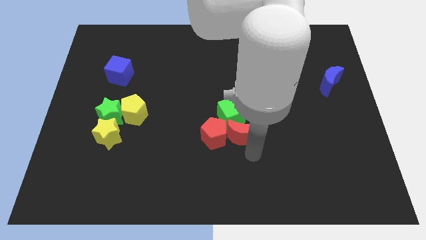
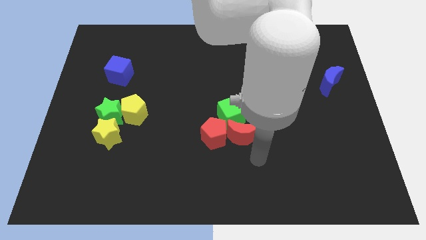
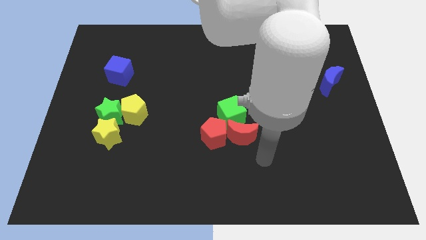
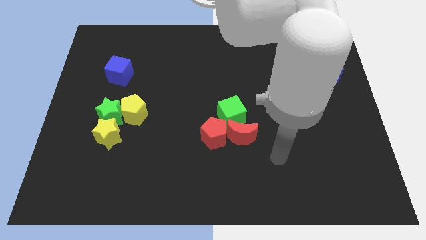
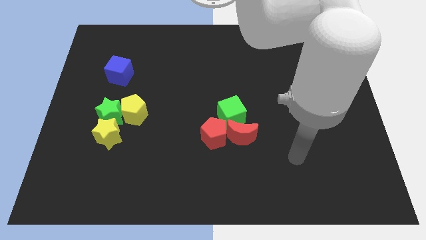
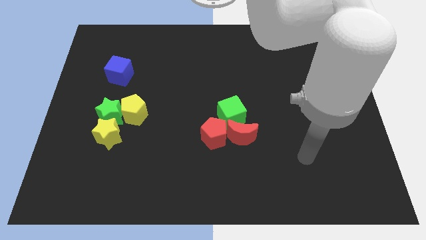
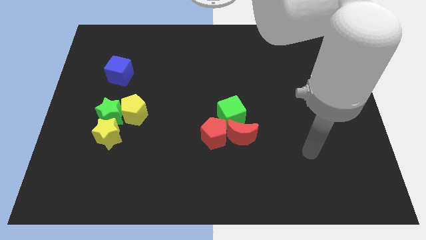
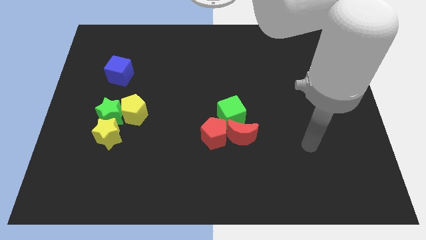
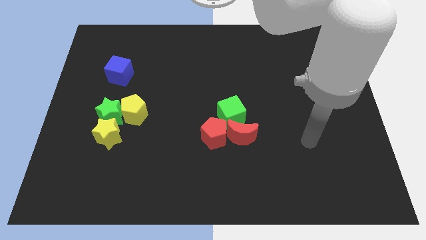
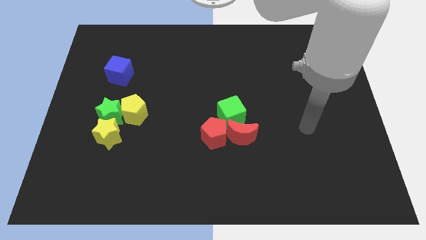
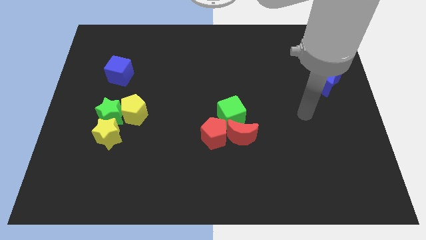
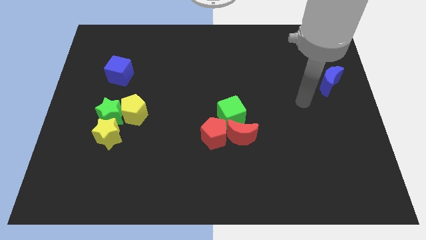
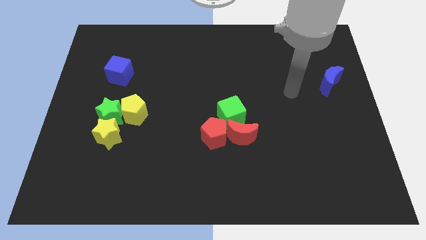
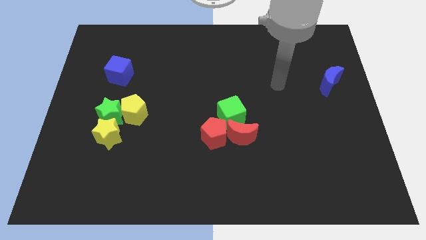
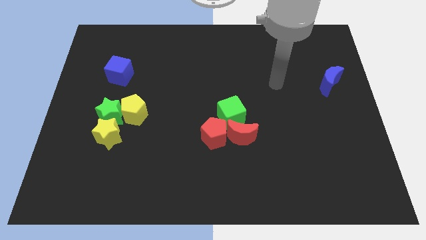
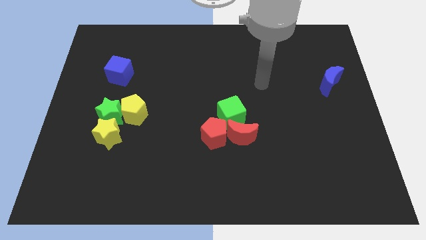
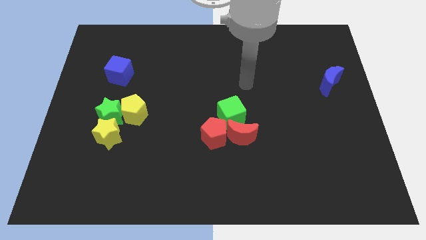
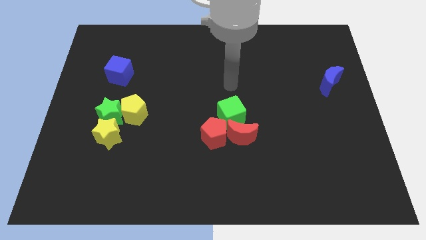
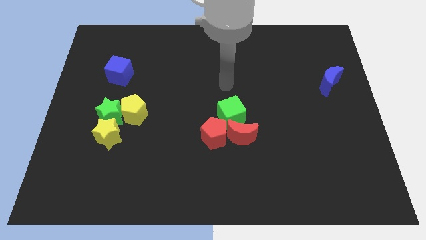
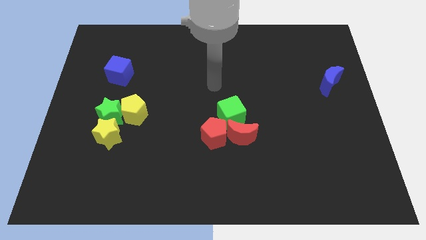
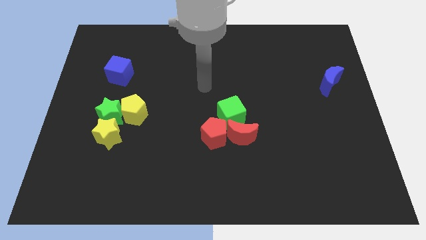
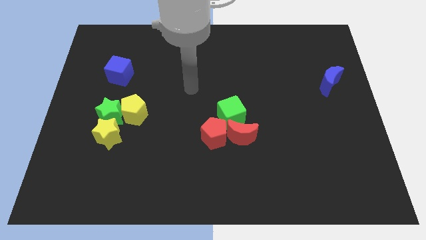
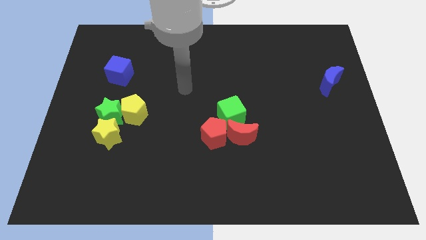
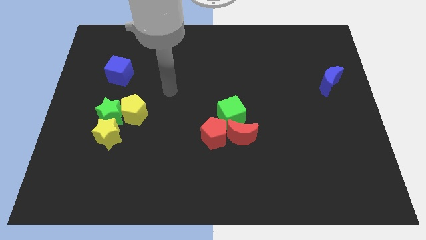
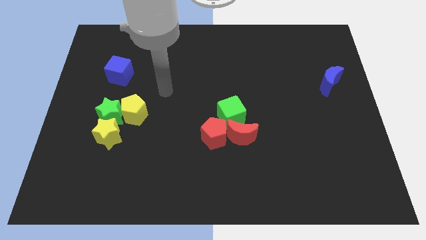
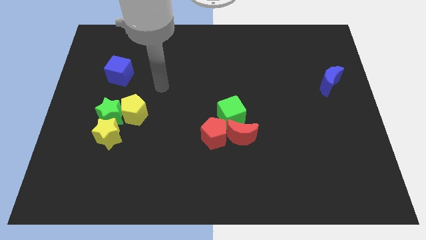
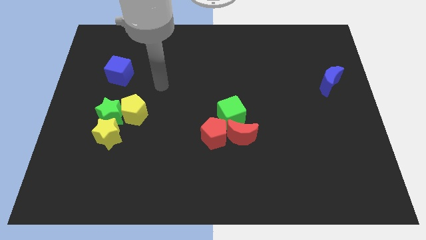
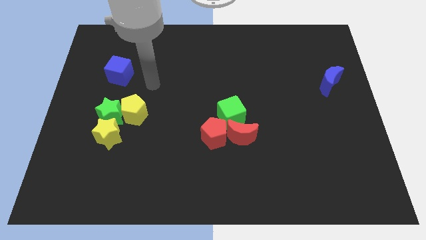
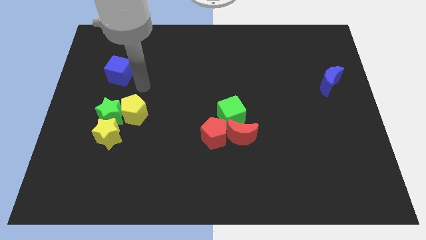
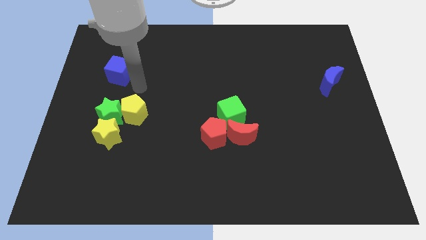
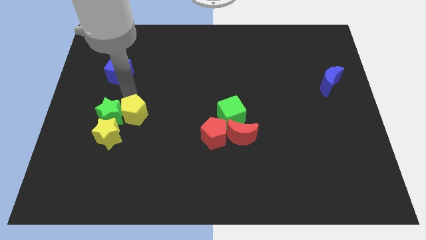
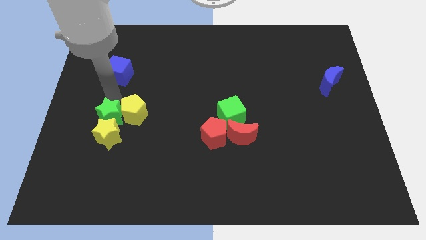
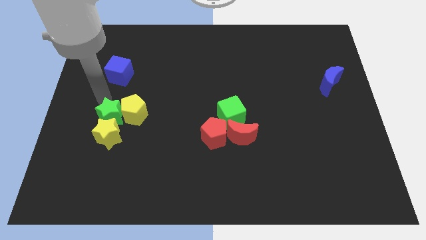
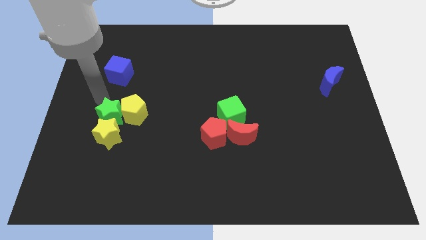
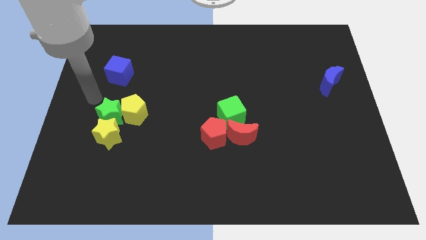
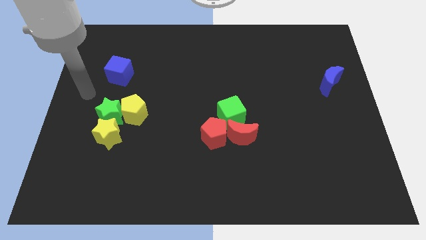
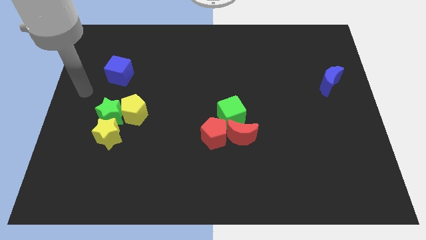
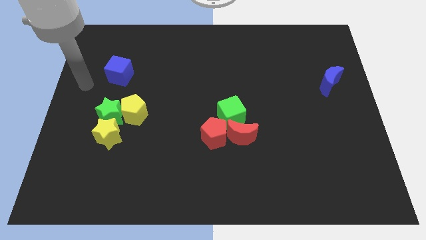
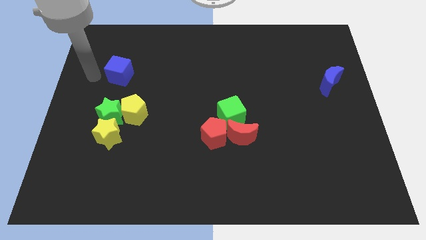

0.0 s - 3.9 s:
move the arm to the left of the blue cube

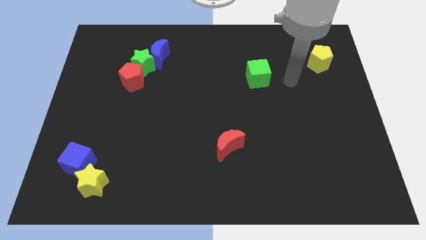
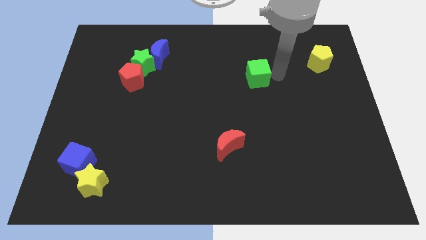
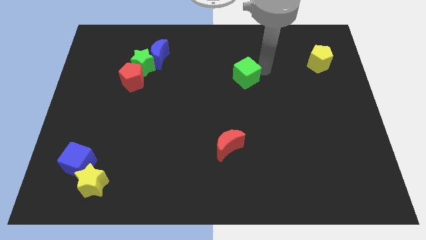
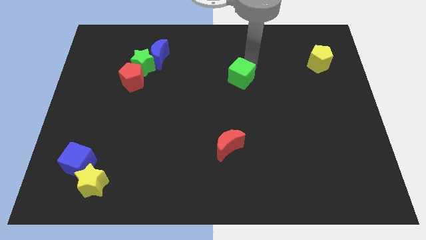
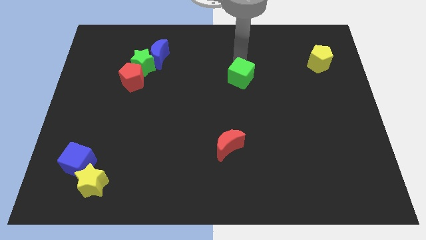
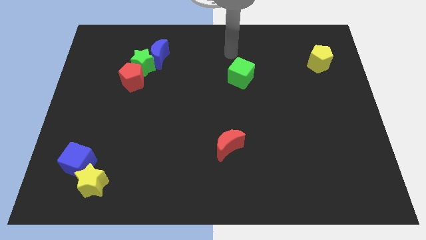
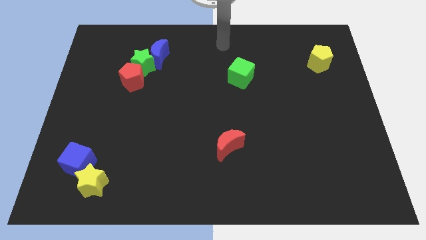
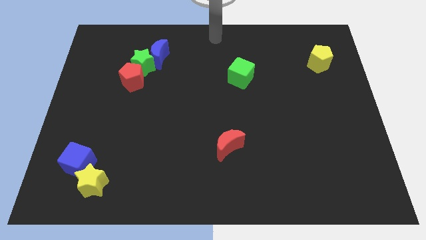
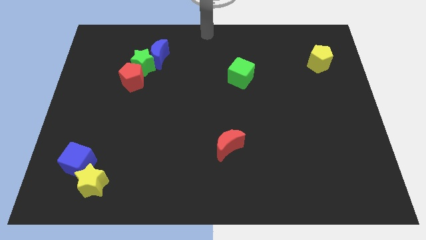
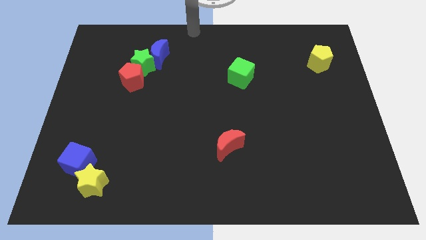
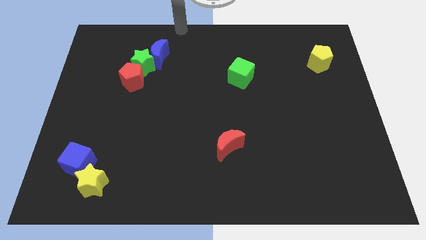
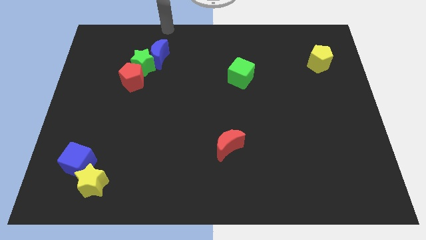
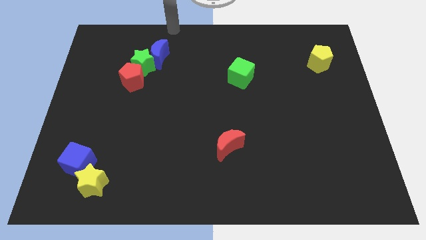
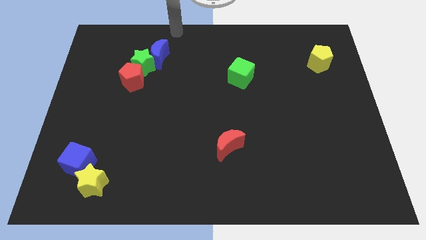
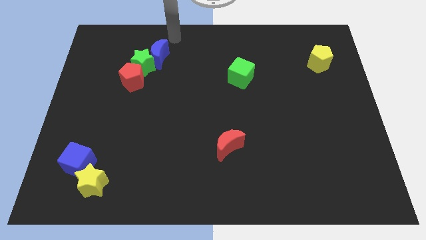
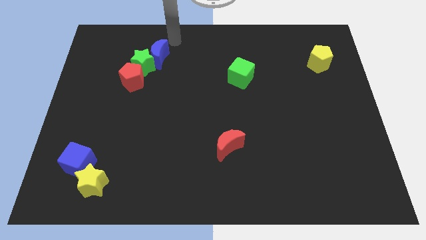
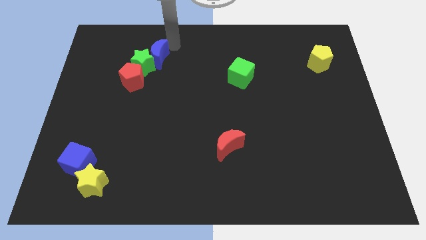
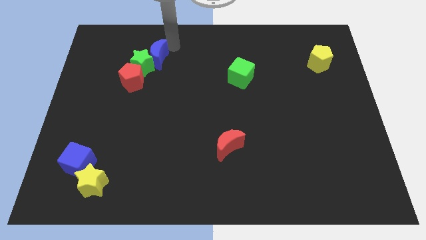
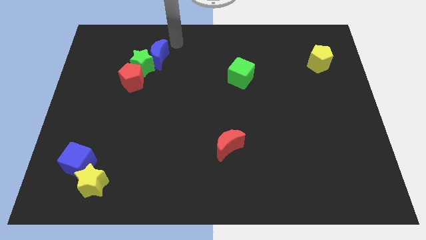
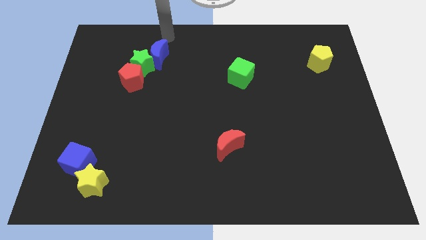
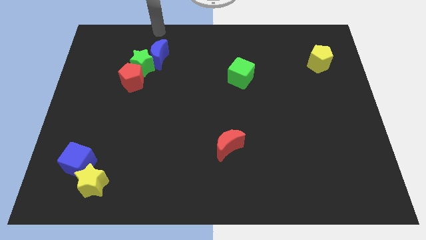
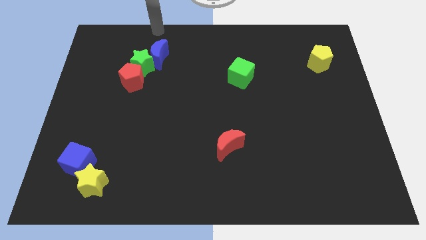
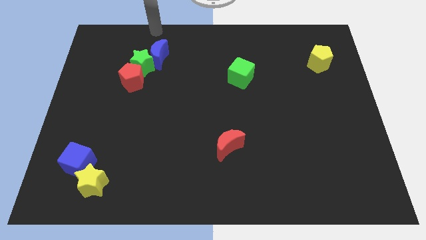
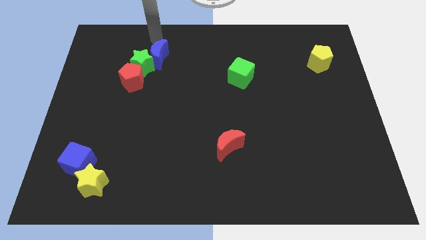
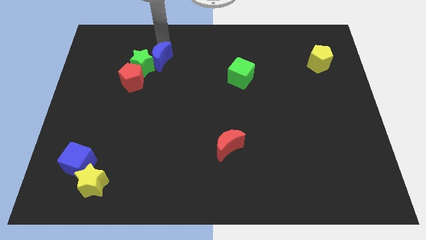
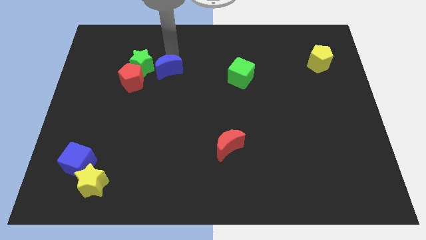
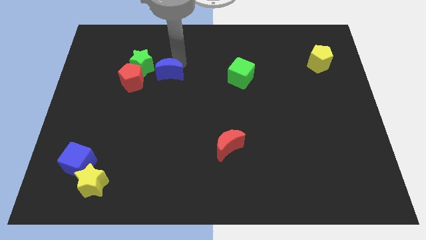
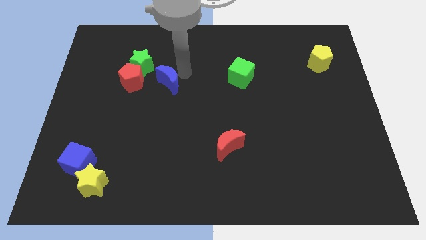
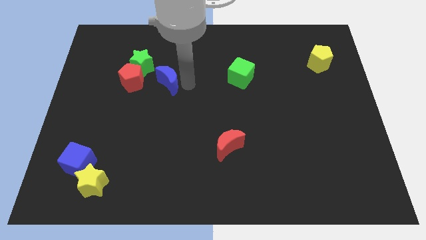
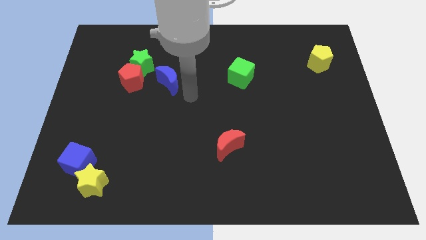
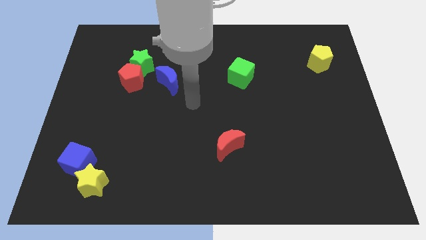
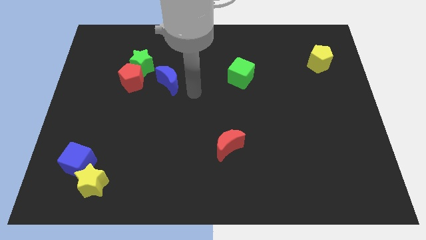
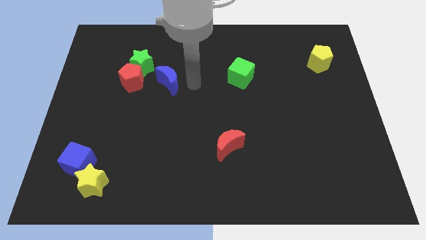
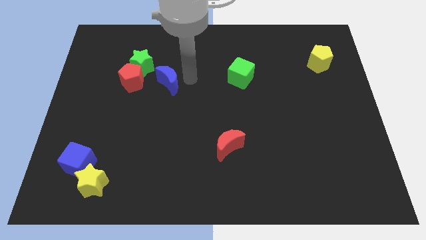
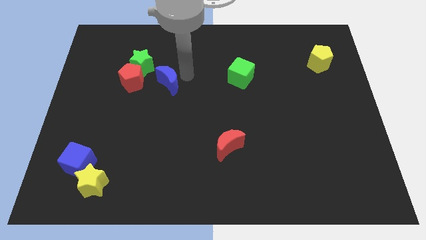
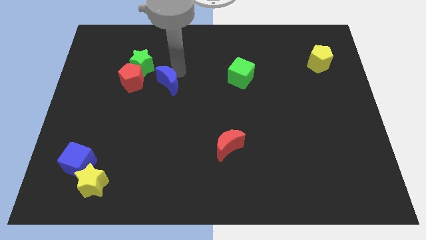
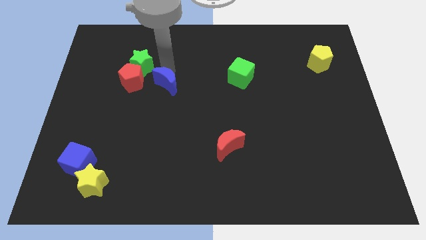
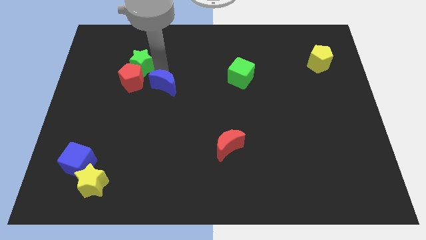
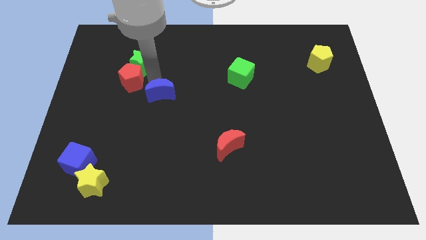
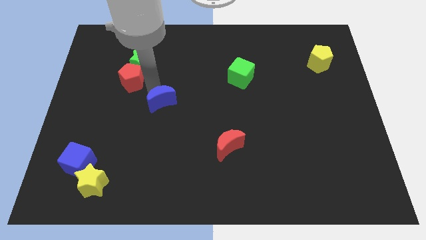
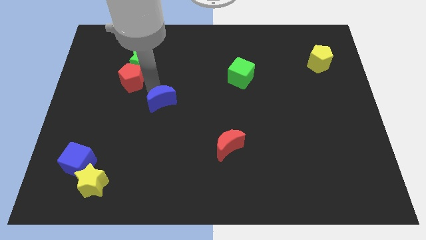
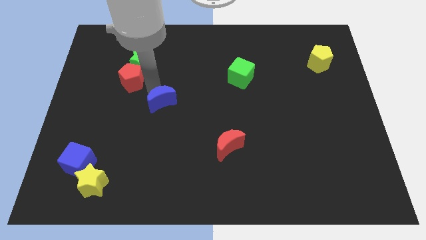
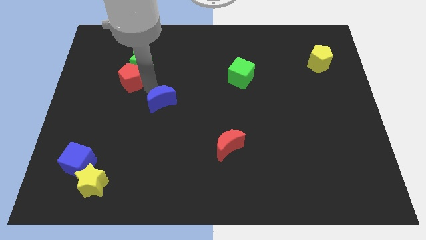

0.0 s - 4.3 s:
move the blue moon in between the red blocks

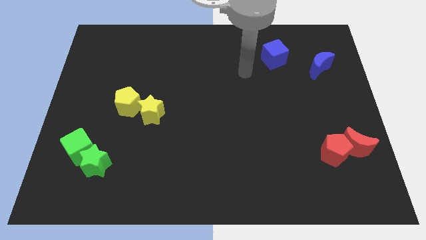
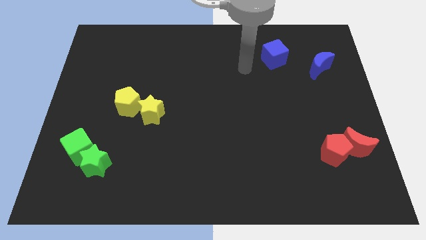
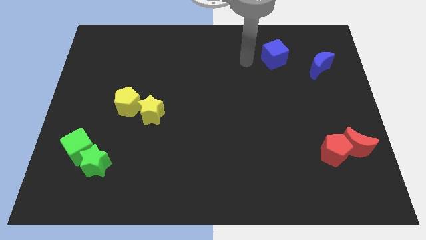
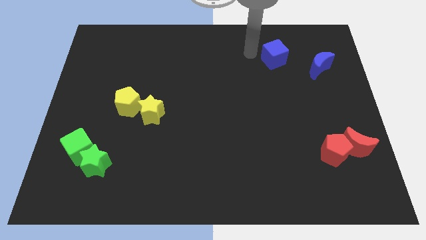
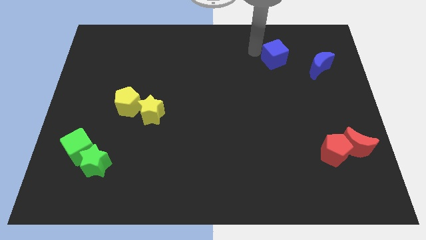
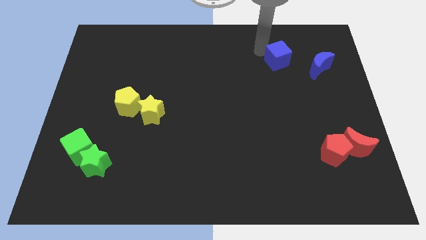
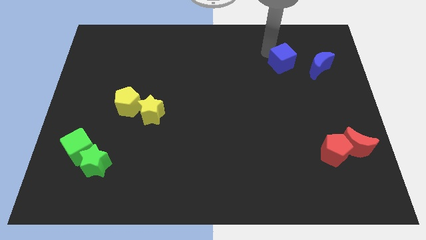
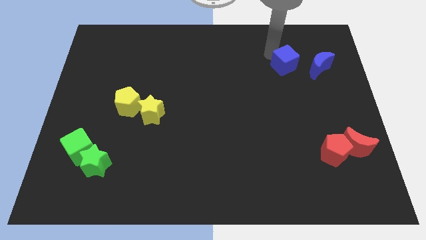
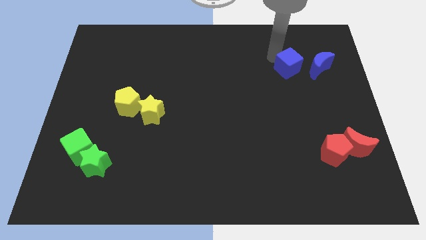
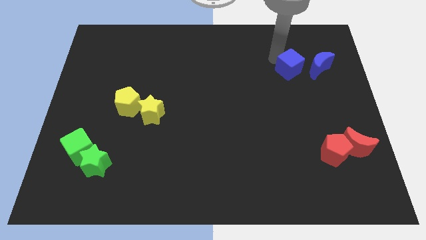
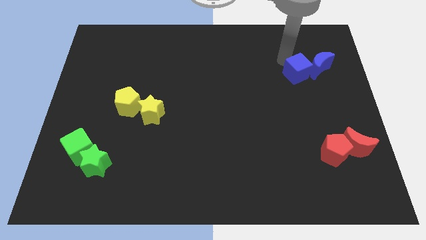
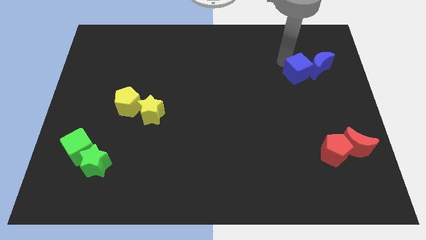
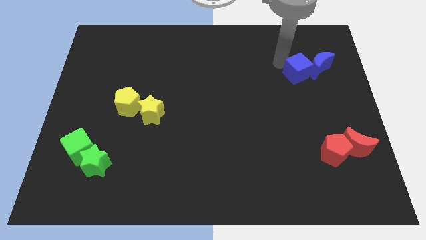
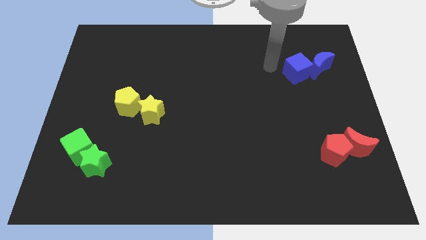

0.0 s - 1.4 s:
place the blue cube to the left side of the blue moon
